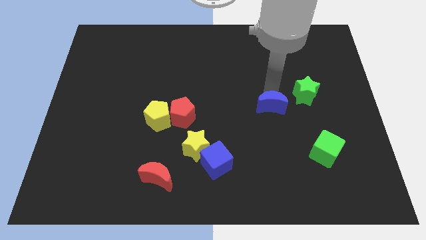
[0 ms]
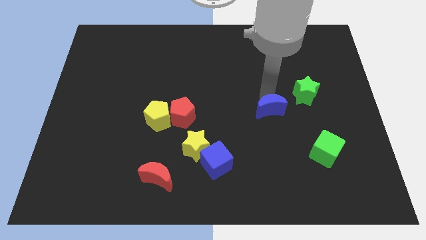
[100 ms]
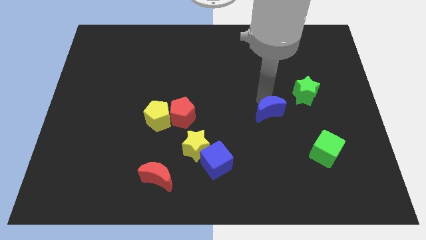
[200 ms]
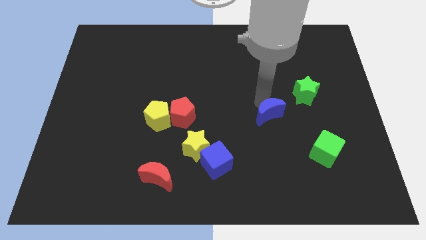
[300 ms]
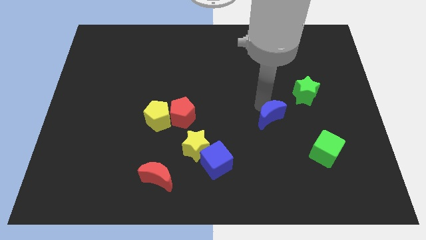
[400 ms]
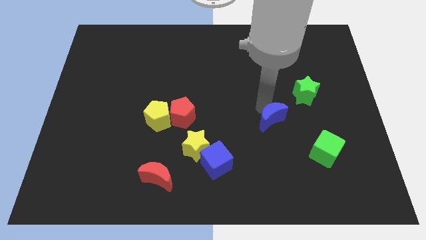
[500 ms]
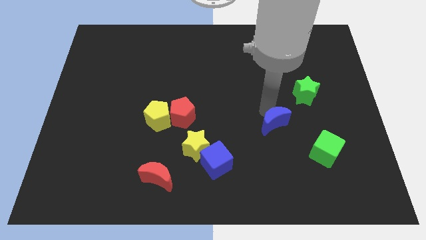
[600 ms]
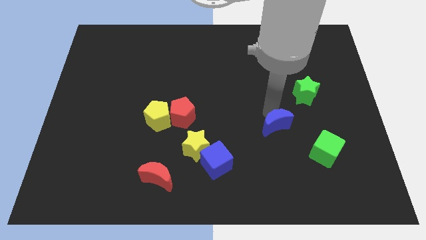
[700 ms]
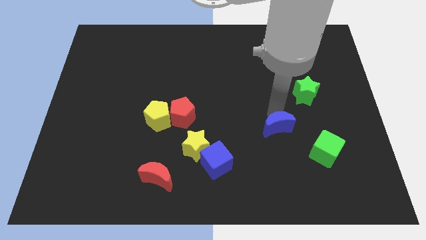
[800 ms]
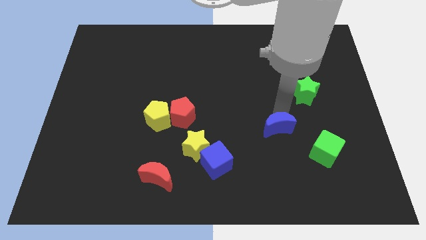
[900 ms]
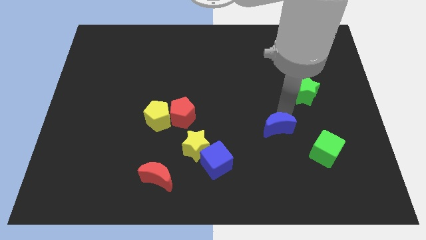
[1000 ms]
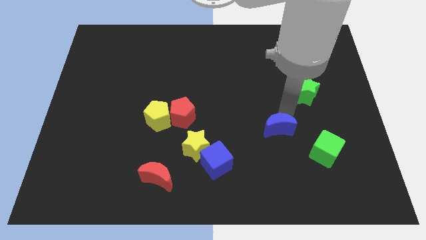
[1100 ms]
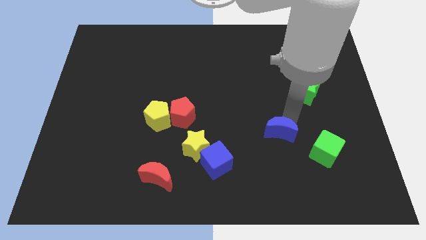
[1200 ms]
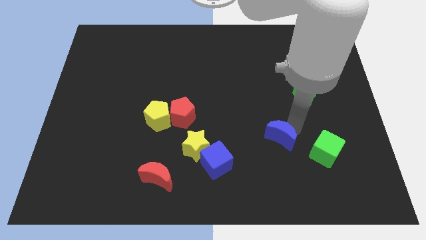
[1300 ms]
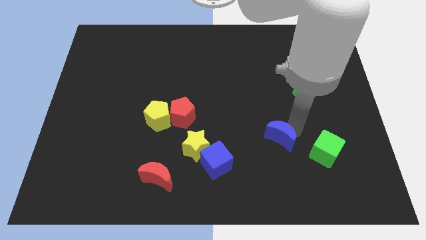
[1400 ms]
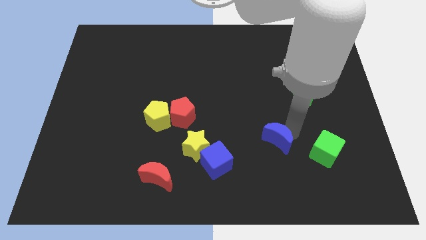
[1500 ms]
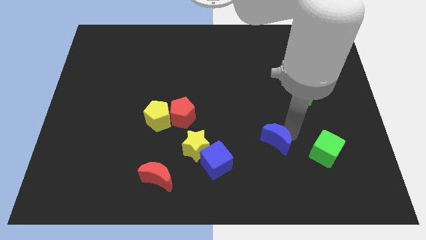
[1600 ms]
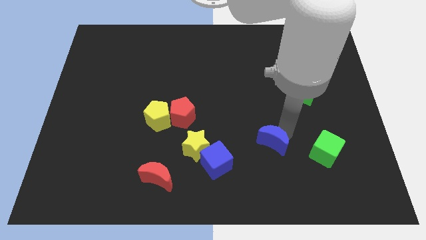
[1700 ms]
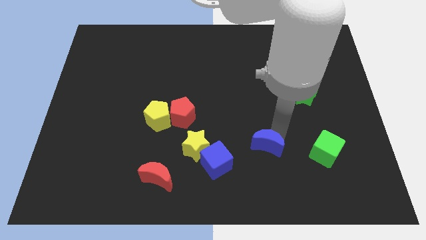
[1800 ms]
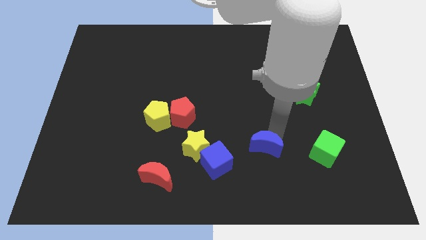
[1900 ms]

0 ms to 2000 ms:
move the blue crescent to the left of the green cube

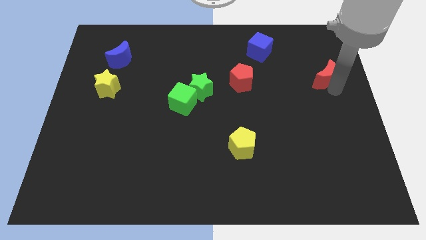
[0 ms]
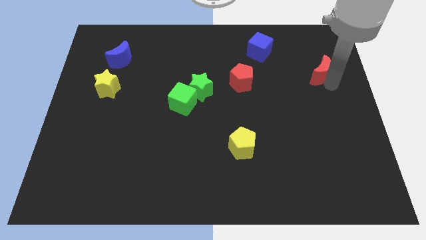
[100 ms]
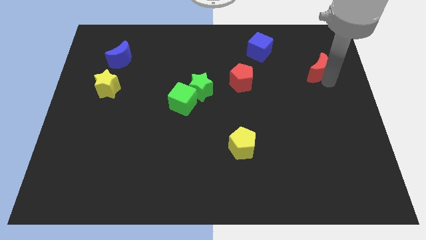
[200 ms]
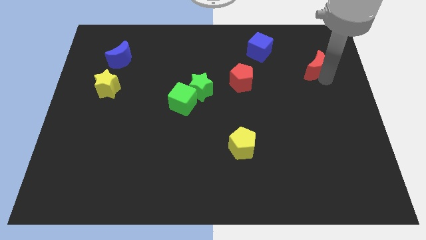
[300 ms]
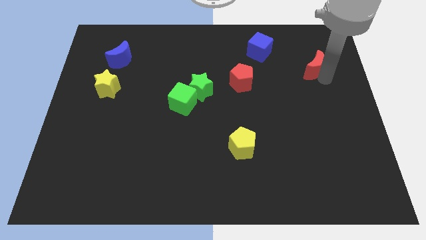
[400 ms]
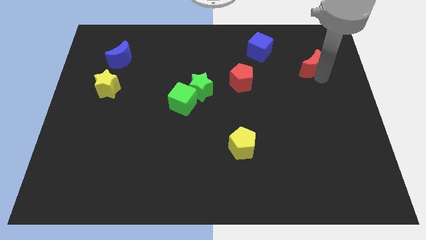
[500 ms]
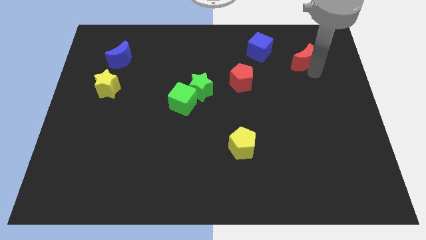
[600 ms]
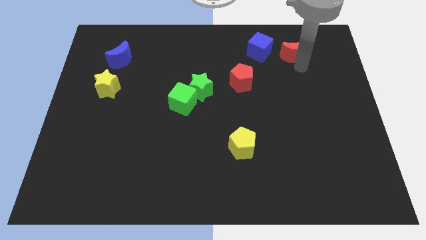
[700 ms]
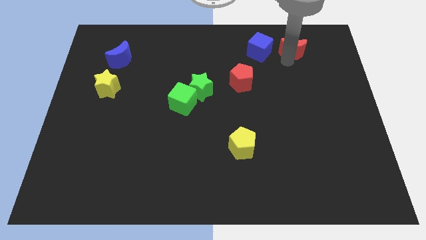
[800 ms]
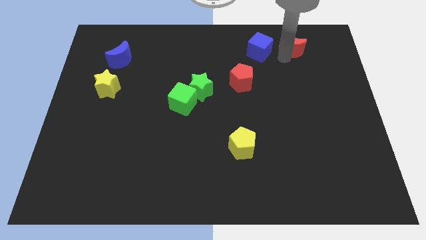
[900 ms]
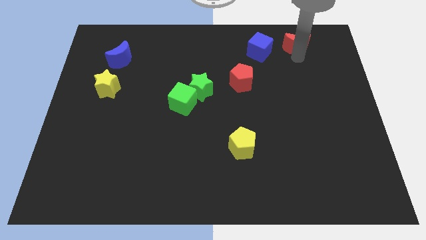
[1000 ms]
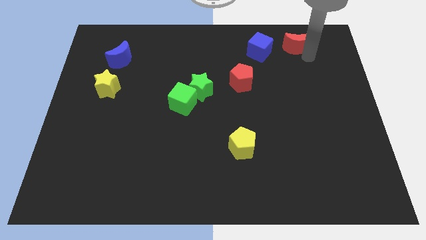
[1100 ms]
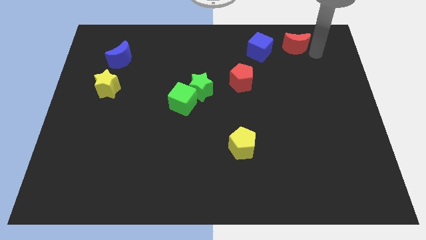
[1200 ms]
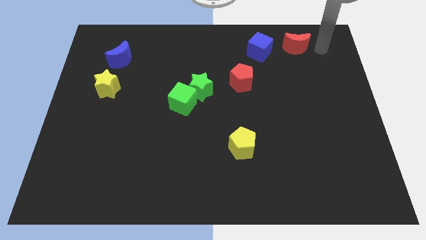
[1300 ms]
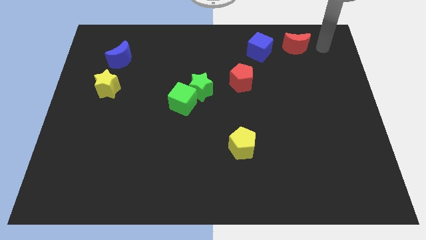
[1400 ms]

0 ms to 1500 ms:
move the red crescent to the right side of the blue cube

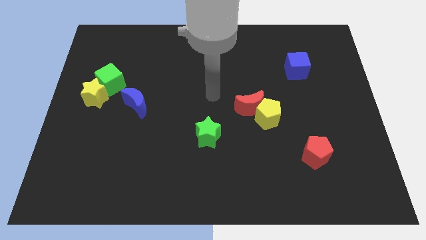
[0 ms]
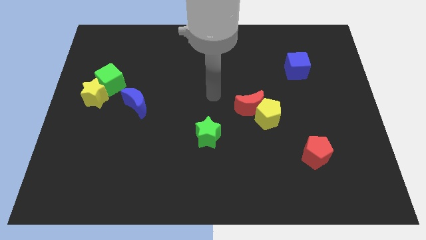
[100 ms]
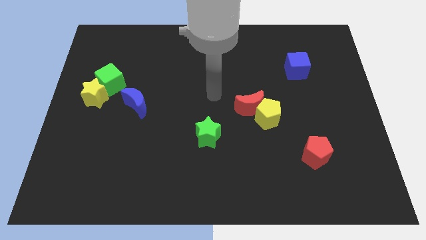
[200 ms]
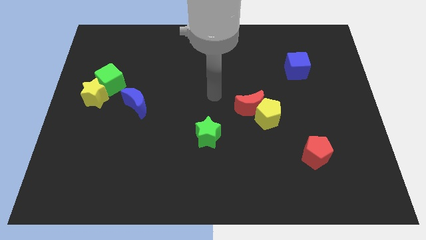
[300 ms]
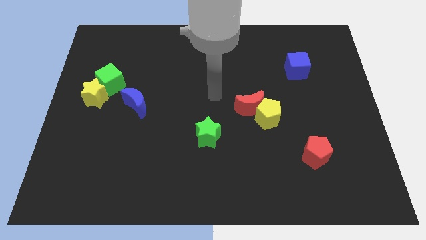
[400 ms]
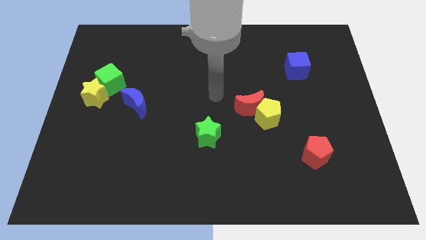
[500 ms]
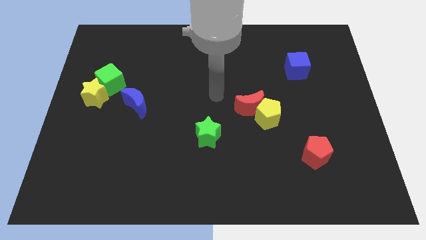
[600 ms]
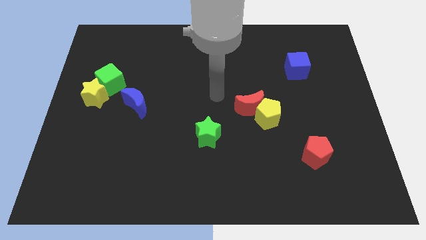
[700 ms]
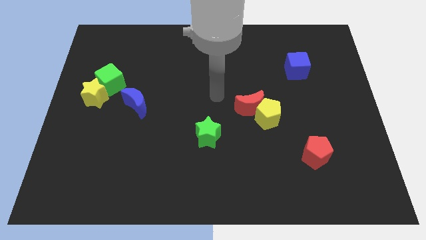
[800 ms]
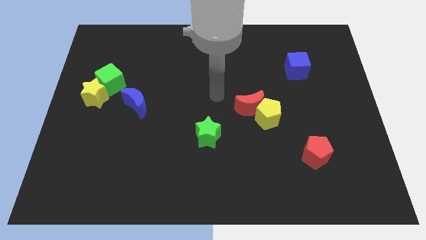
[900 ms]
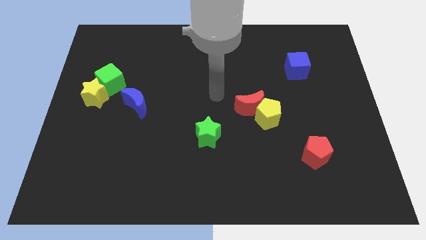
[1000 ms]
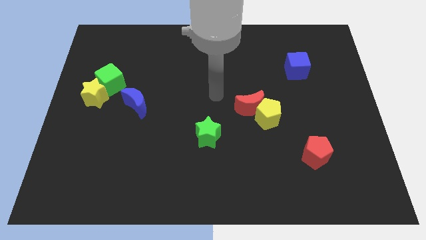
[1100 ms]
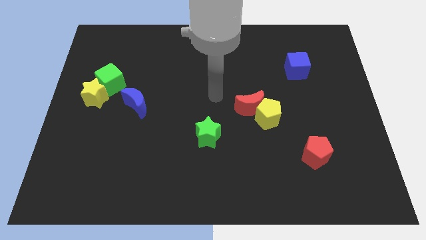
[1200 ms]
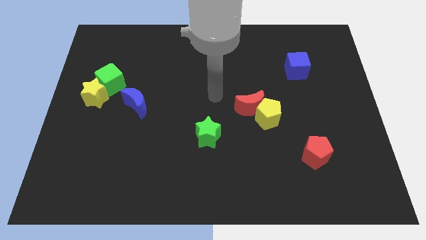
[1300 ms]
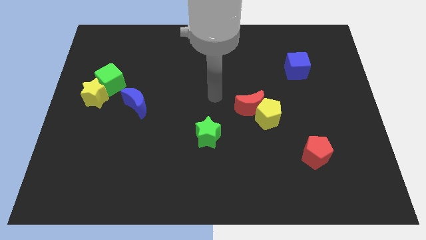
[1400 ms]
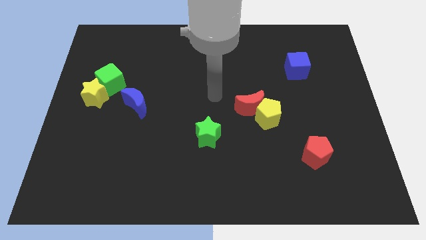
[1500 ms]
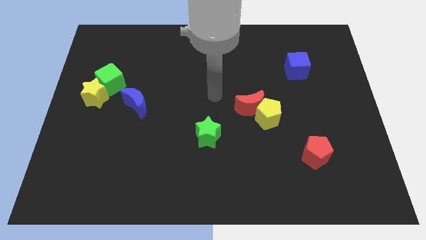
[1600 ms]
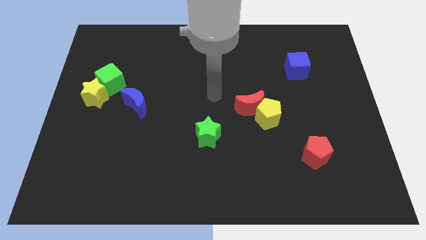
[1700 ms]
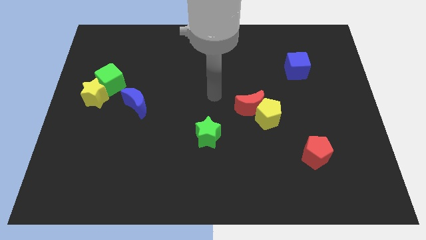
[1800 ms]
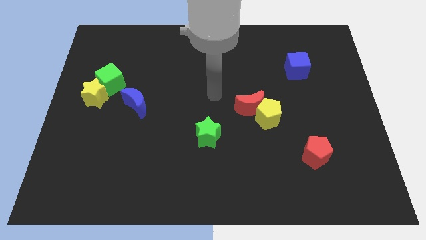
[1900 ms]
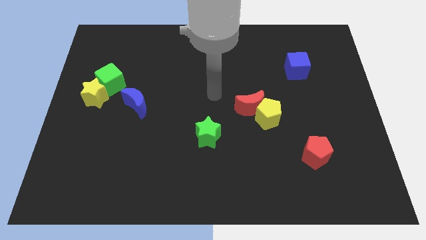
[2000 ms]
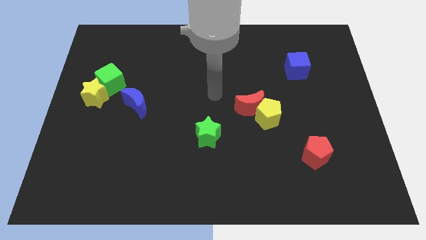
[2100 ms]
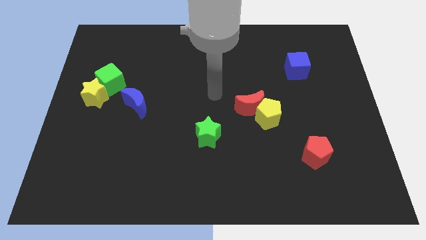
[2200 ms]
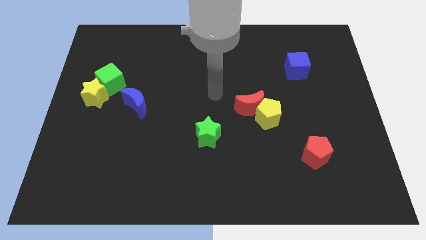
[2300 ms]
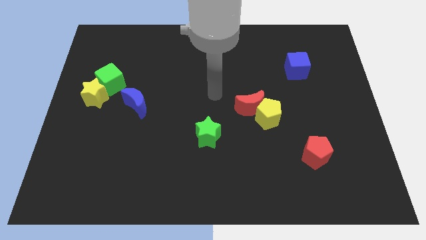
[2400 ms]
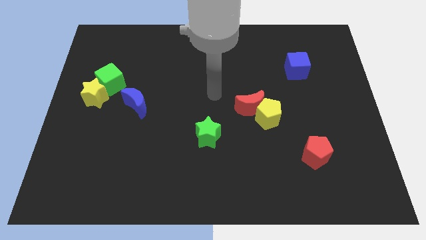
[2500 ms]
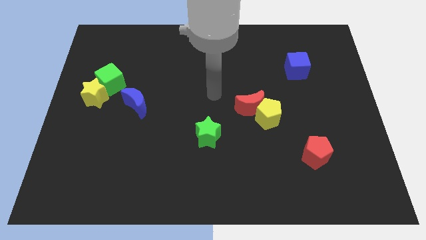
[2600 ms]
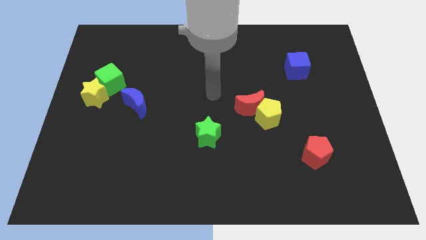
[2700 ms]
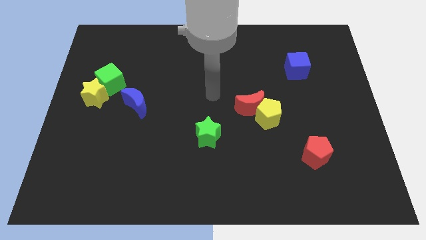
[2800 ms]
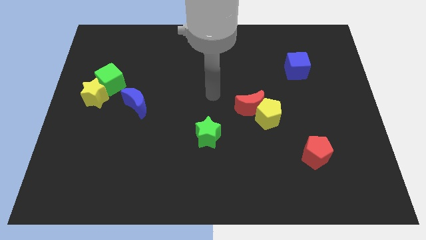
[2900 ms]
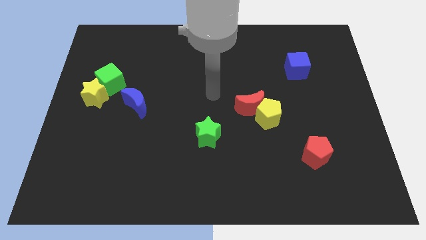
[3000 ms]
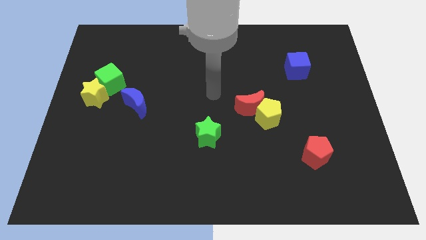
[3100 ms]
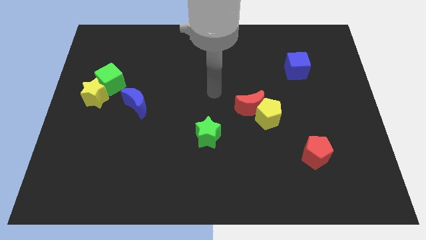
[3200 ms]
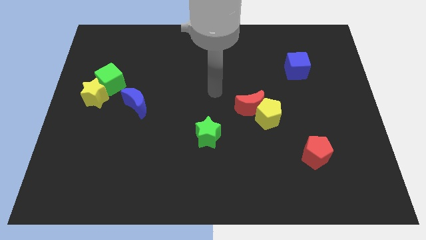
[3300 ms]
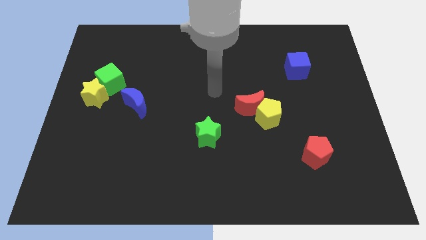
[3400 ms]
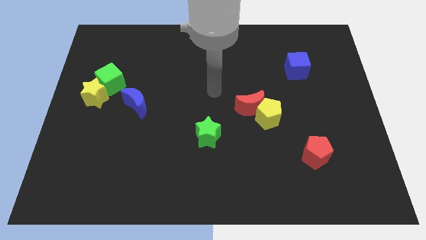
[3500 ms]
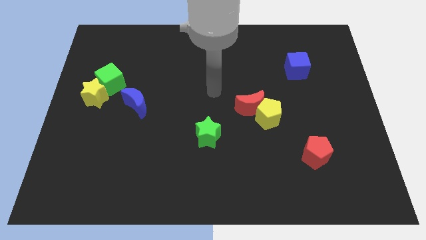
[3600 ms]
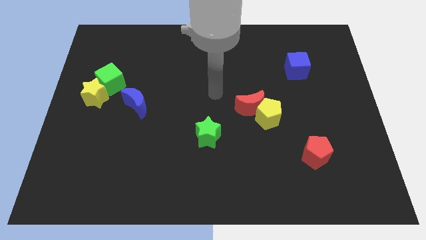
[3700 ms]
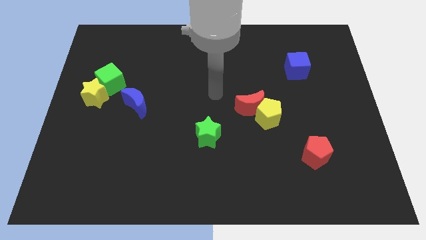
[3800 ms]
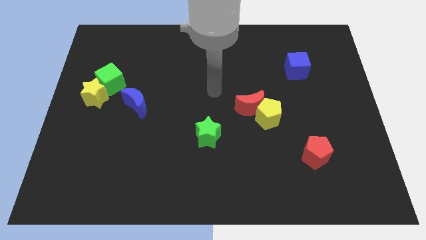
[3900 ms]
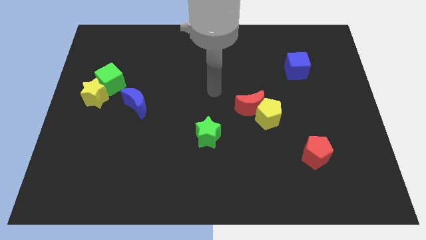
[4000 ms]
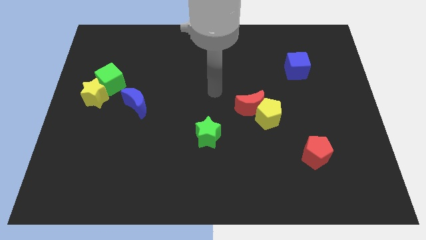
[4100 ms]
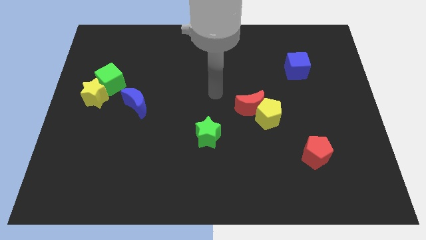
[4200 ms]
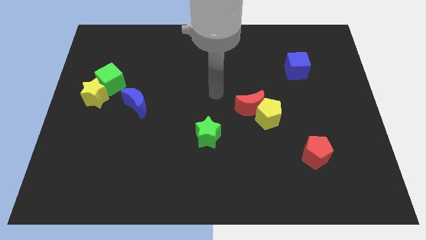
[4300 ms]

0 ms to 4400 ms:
move the arm on the middle of the board

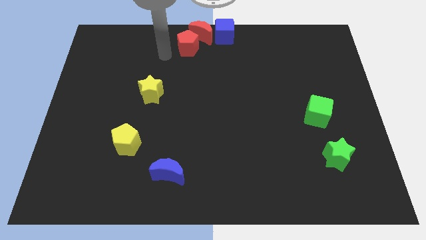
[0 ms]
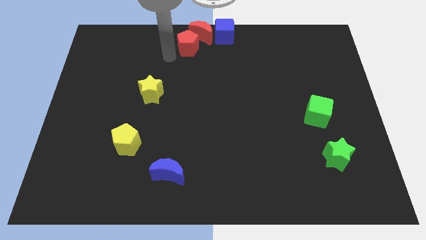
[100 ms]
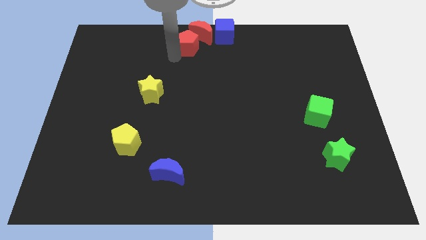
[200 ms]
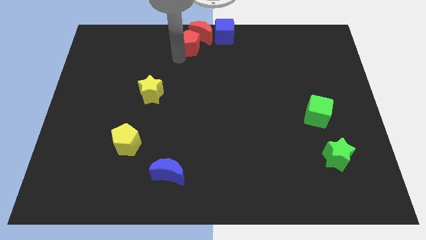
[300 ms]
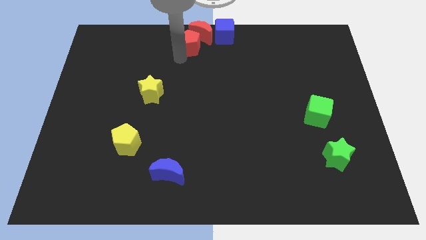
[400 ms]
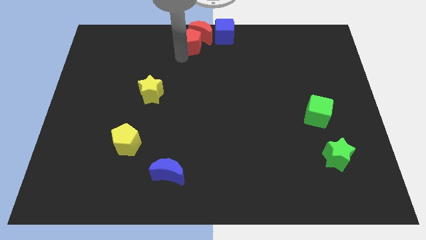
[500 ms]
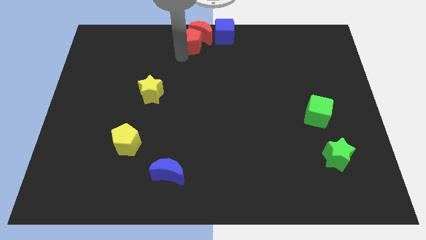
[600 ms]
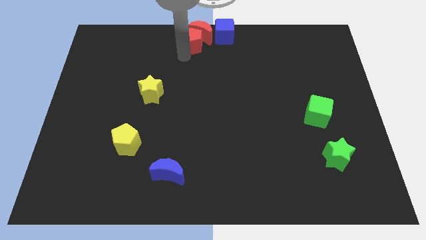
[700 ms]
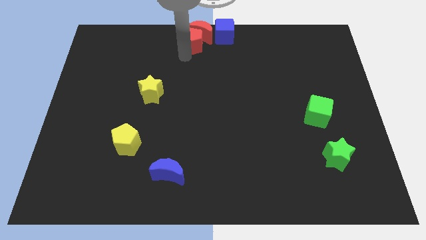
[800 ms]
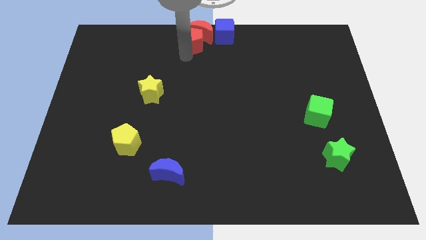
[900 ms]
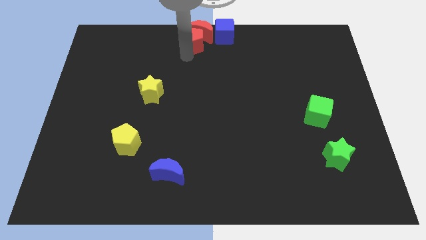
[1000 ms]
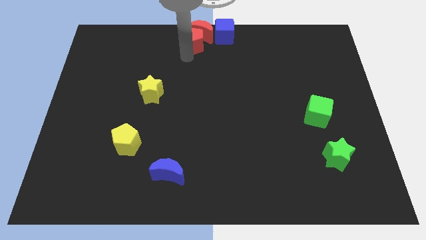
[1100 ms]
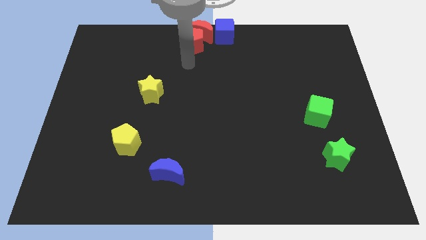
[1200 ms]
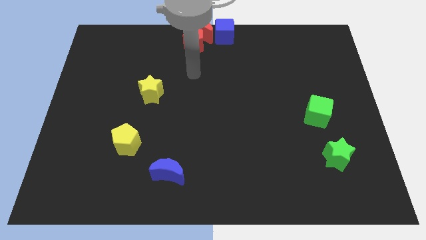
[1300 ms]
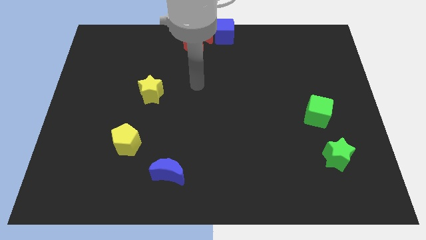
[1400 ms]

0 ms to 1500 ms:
push red pentagon into the red crescent
